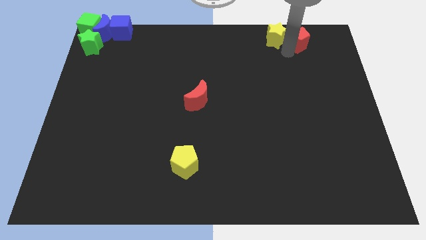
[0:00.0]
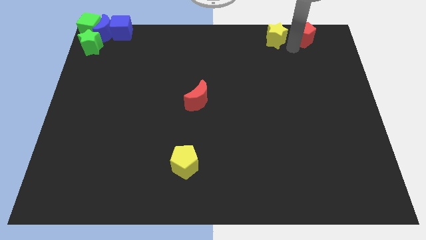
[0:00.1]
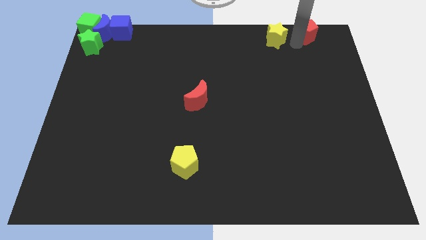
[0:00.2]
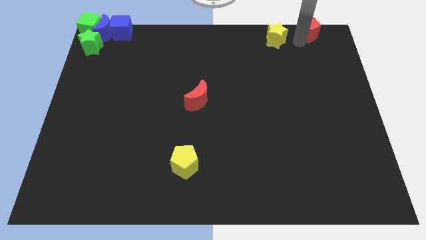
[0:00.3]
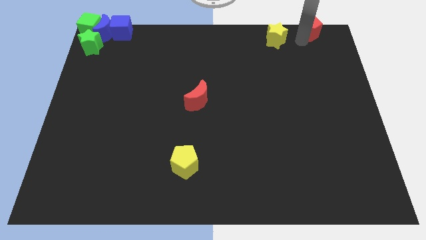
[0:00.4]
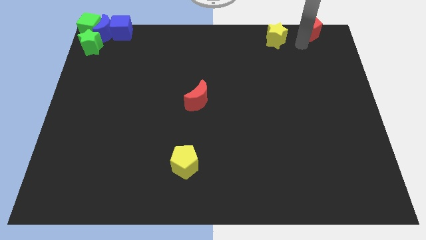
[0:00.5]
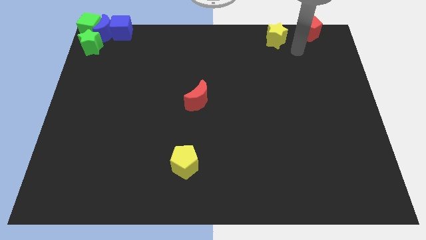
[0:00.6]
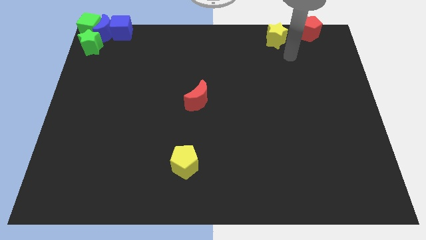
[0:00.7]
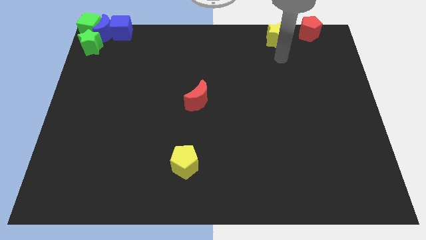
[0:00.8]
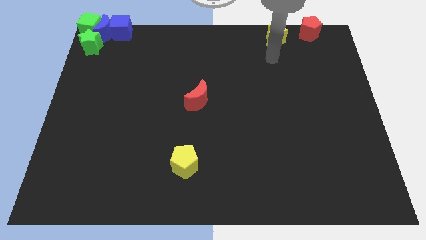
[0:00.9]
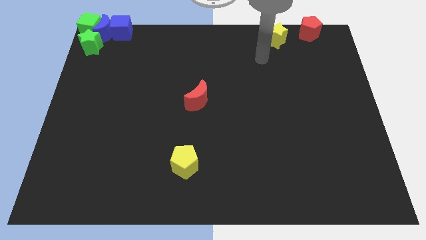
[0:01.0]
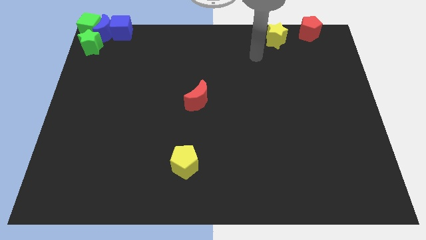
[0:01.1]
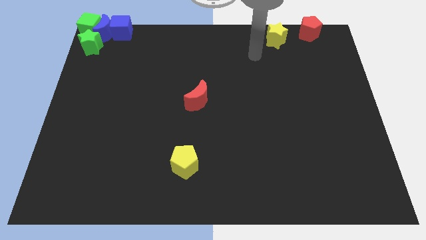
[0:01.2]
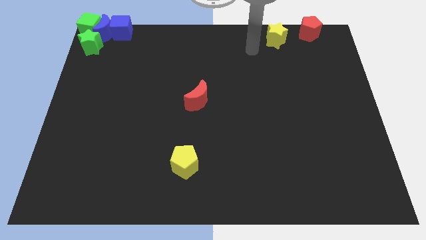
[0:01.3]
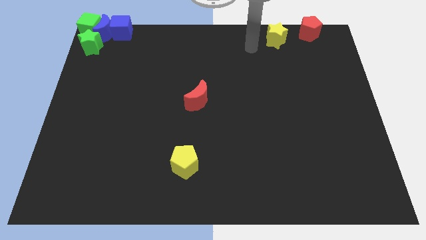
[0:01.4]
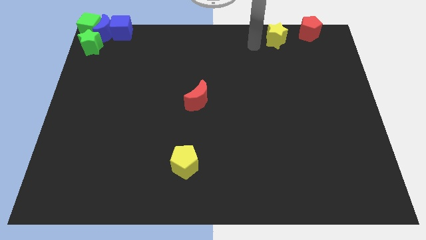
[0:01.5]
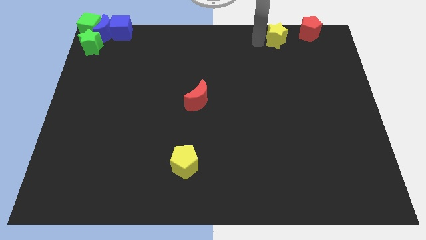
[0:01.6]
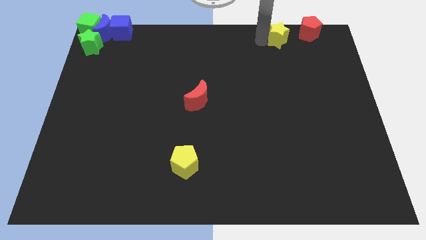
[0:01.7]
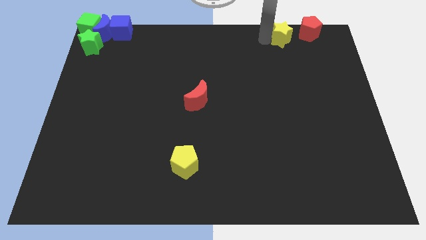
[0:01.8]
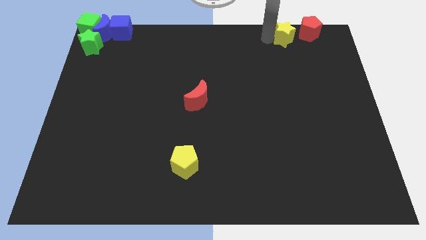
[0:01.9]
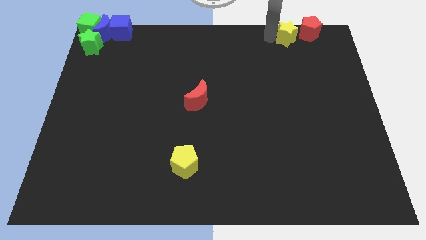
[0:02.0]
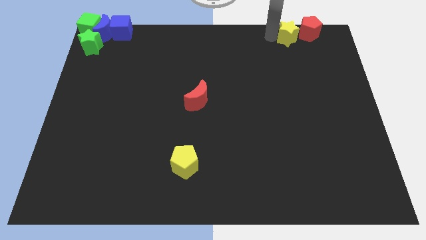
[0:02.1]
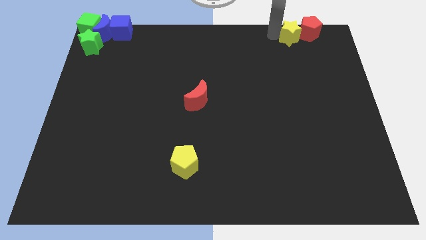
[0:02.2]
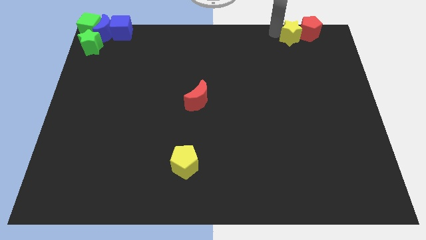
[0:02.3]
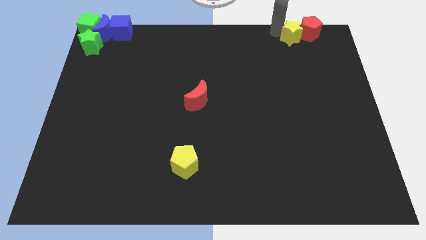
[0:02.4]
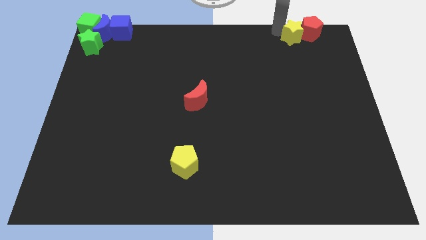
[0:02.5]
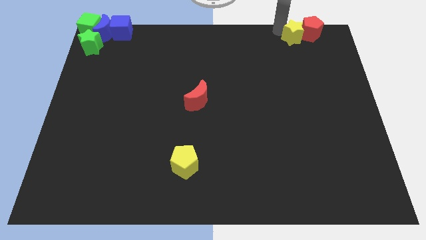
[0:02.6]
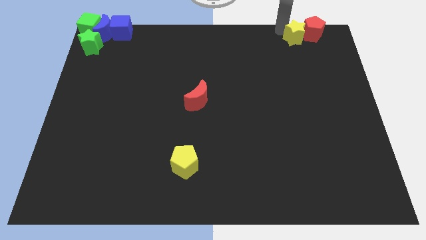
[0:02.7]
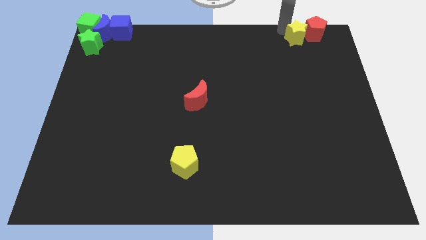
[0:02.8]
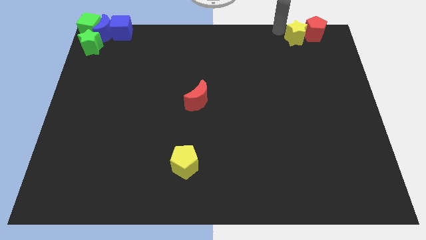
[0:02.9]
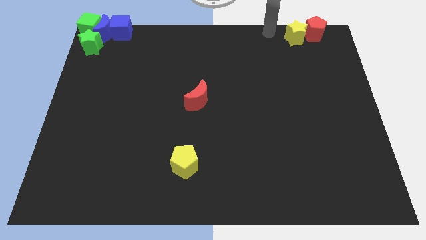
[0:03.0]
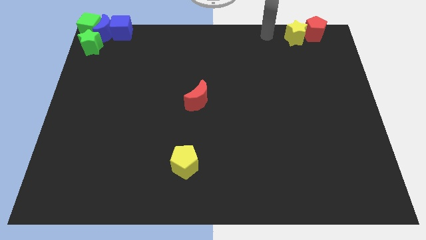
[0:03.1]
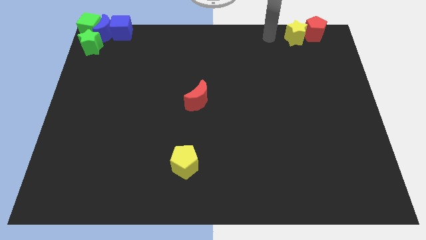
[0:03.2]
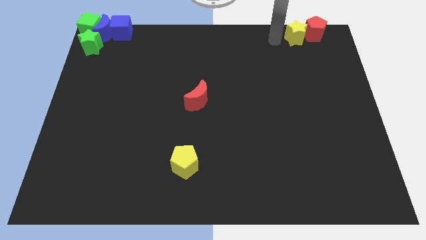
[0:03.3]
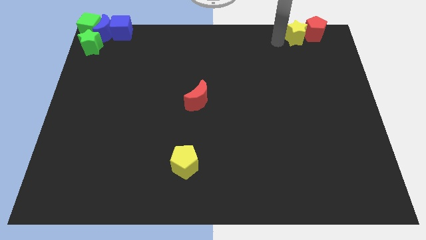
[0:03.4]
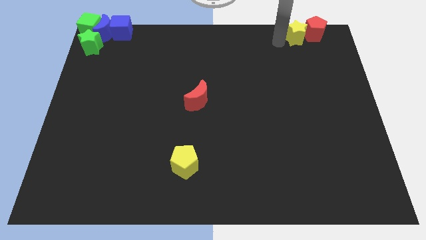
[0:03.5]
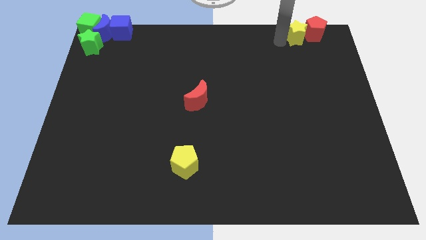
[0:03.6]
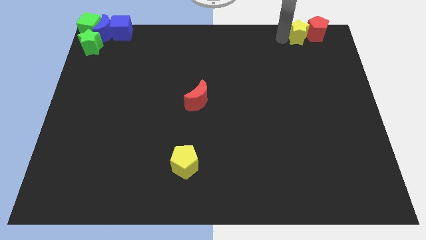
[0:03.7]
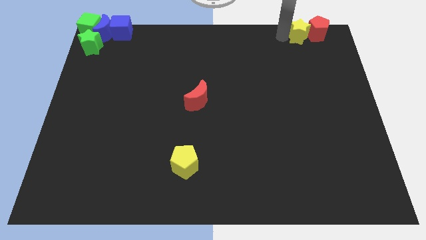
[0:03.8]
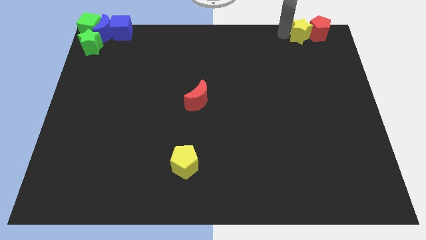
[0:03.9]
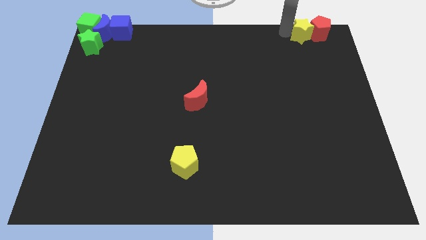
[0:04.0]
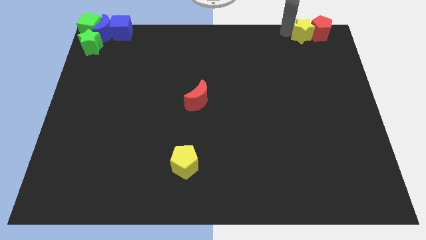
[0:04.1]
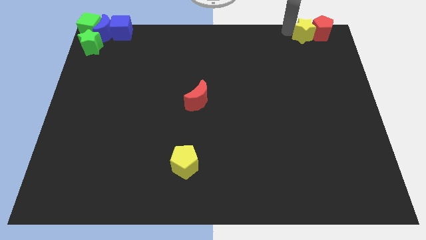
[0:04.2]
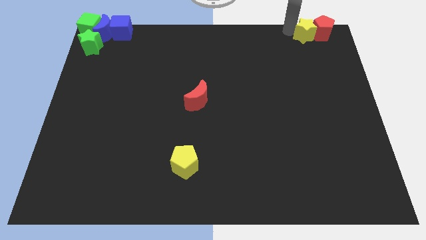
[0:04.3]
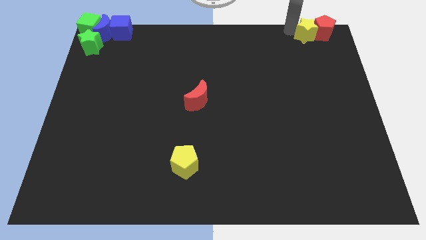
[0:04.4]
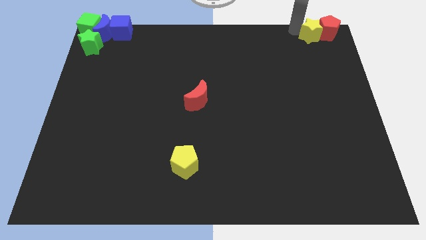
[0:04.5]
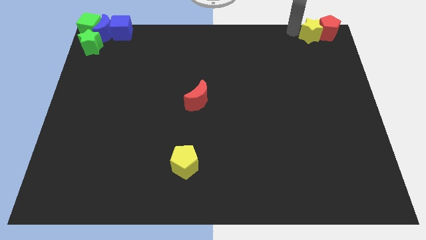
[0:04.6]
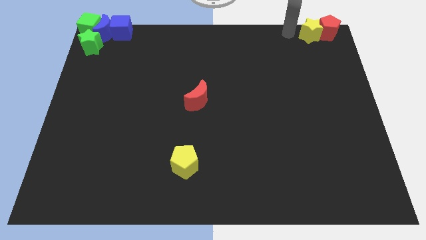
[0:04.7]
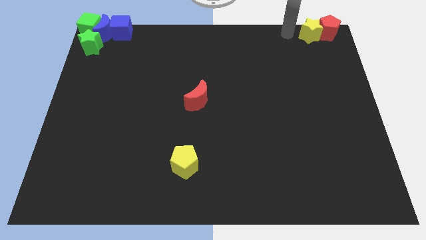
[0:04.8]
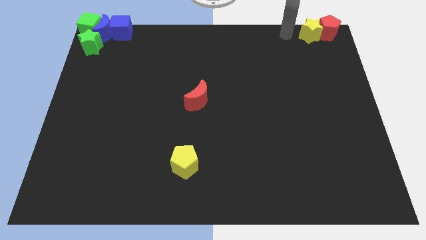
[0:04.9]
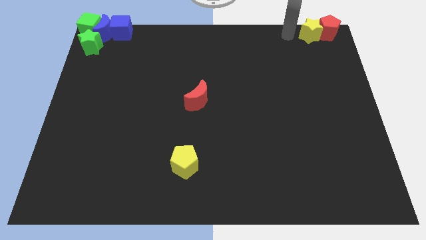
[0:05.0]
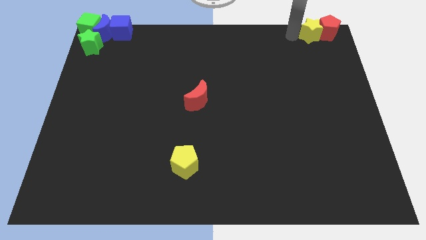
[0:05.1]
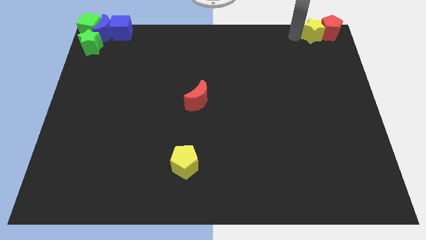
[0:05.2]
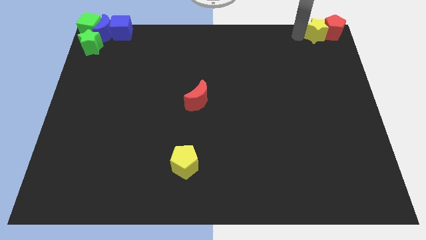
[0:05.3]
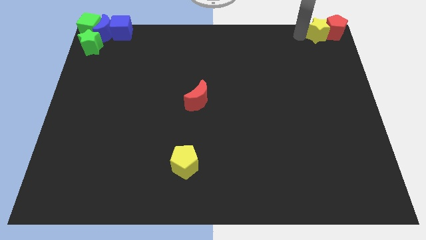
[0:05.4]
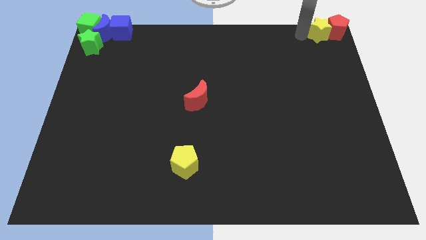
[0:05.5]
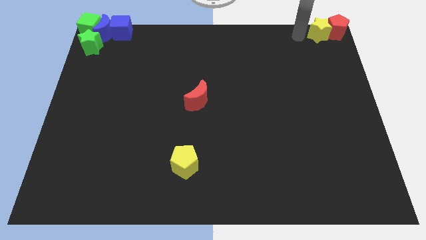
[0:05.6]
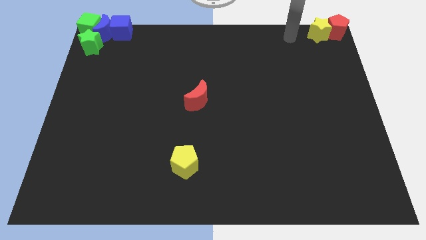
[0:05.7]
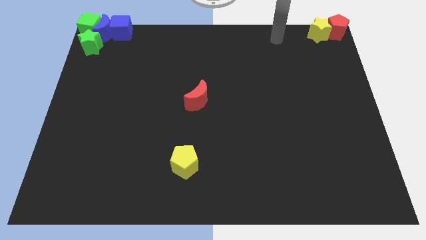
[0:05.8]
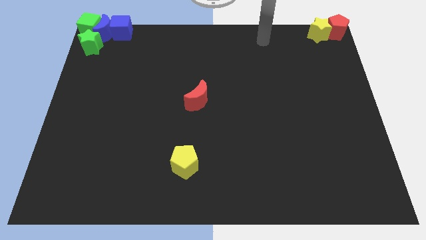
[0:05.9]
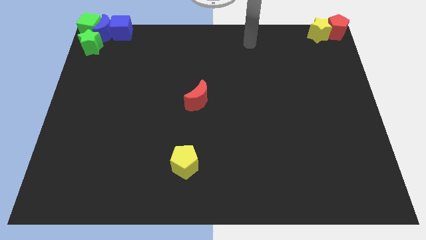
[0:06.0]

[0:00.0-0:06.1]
push the yellow star and the red pentagon to the top right corner of the board

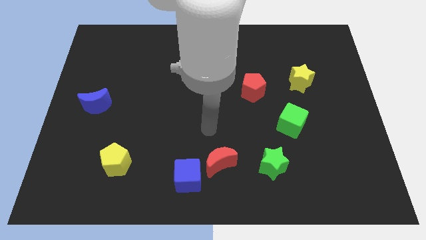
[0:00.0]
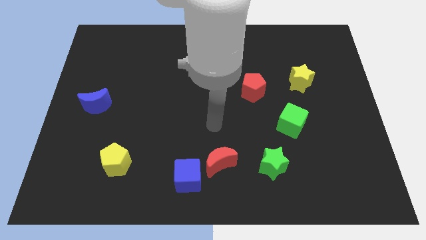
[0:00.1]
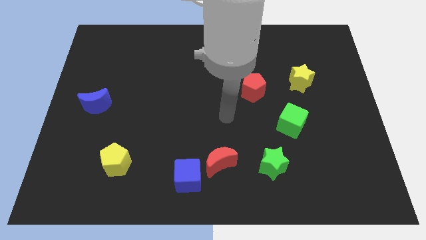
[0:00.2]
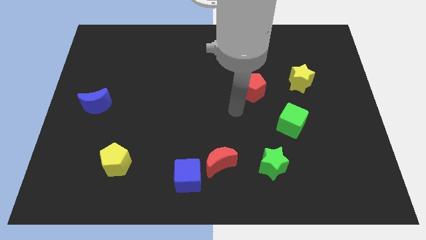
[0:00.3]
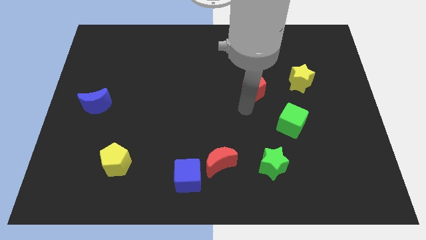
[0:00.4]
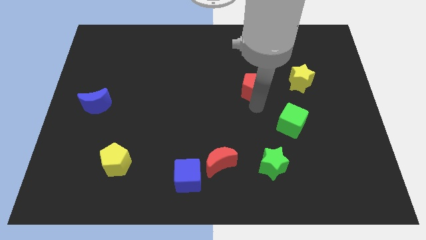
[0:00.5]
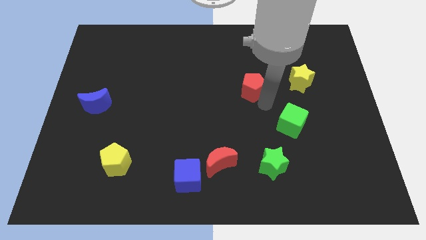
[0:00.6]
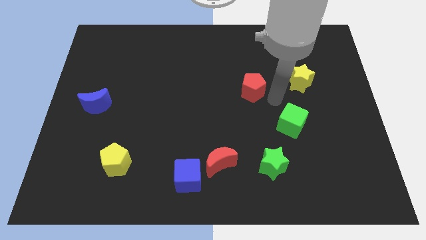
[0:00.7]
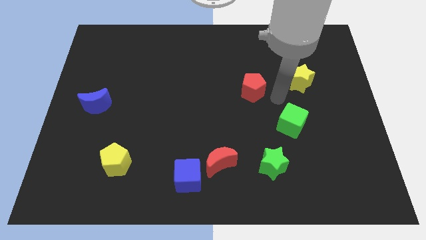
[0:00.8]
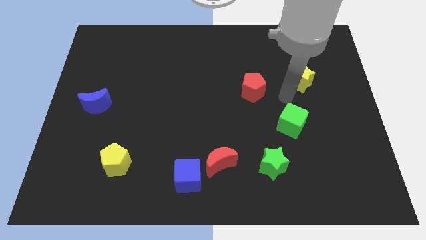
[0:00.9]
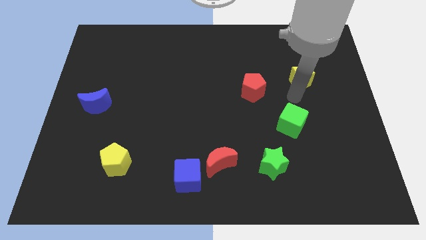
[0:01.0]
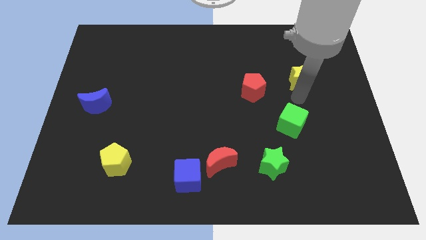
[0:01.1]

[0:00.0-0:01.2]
move your arm towards the yellow star

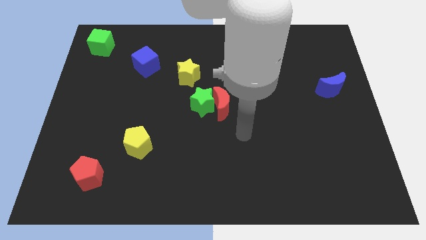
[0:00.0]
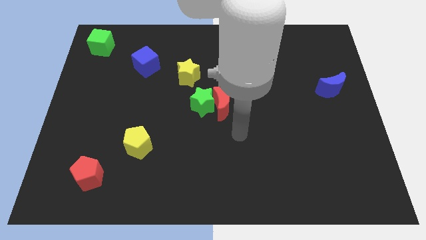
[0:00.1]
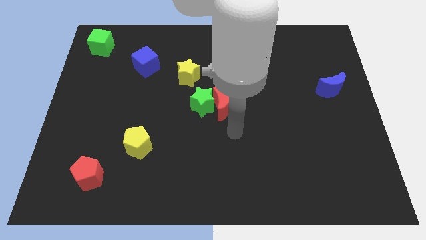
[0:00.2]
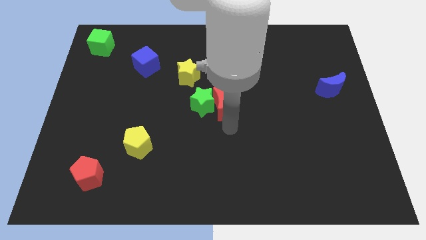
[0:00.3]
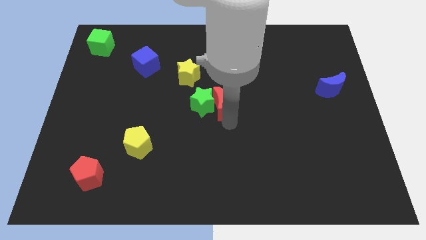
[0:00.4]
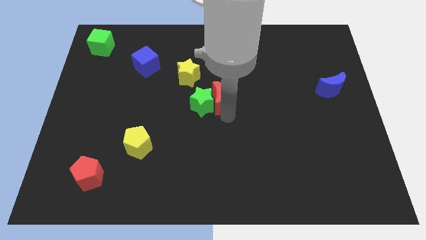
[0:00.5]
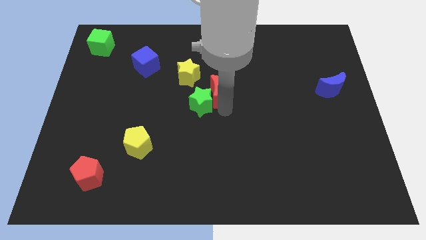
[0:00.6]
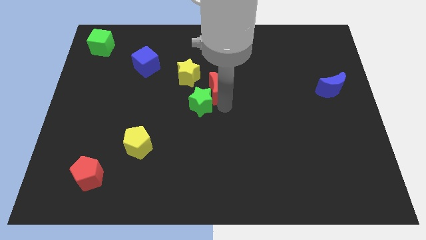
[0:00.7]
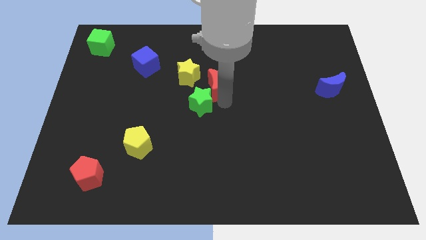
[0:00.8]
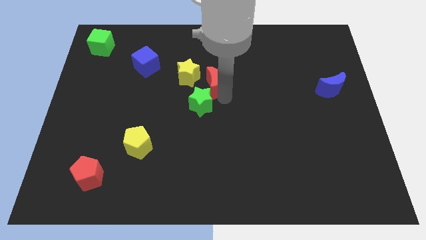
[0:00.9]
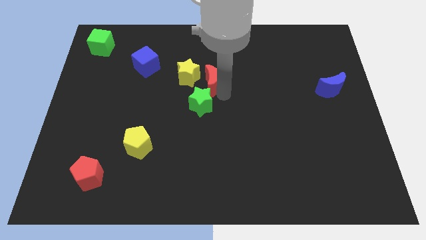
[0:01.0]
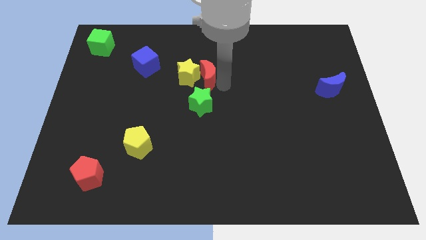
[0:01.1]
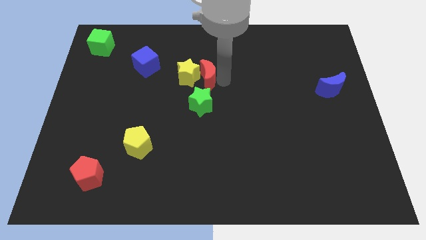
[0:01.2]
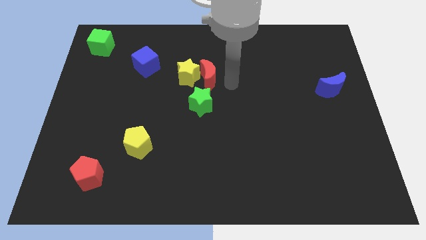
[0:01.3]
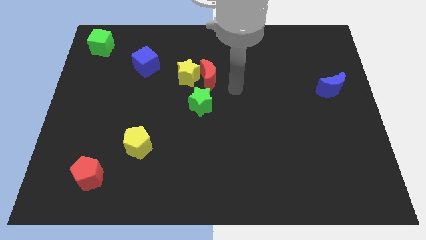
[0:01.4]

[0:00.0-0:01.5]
move the red crescent to the right of the yellow star

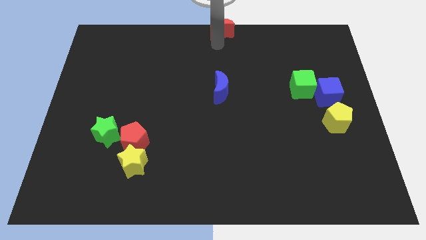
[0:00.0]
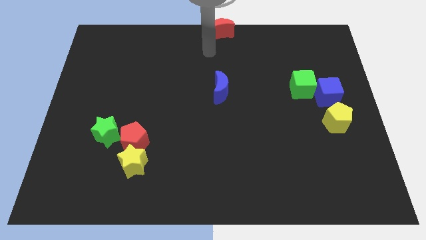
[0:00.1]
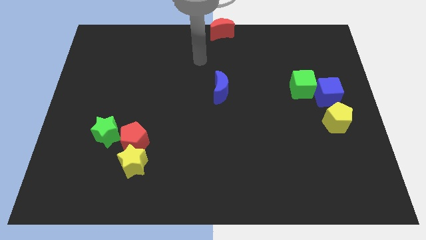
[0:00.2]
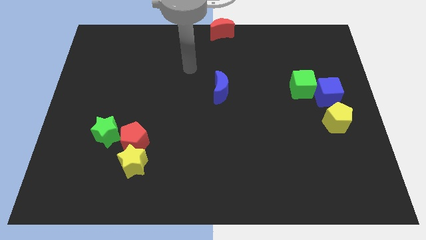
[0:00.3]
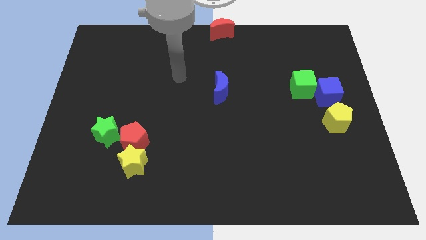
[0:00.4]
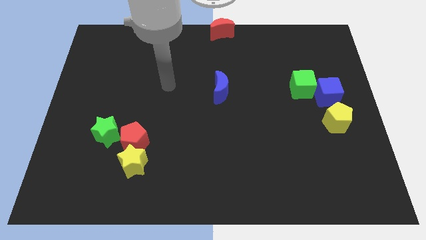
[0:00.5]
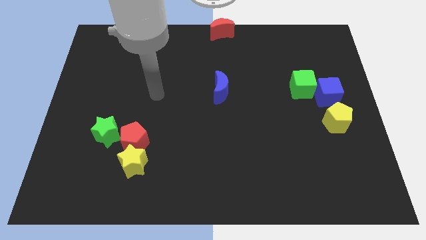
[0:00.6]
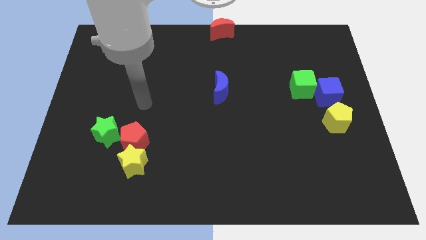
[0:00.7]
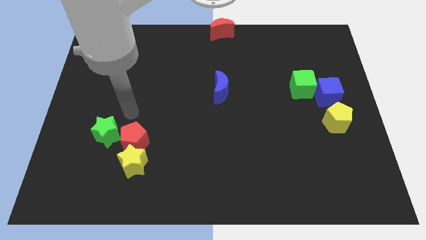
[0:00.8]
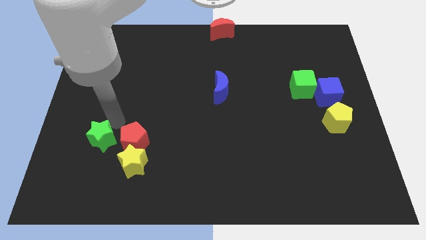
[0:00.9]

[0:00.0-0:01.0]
bring the arm towards the green star
